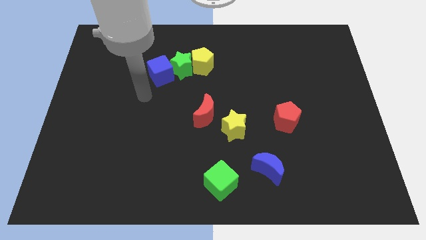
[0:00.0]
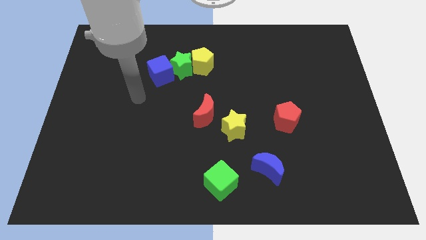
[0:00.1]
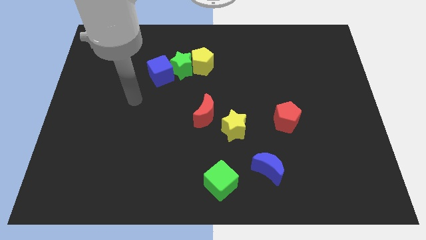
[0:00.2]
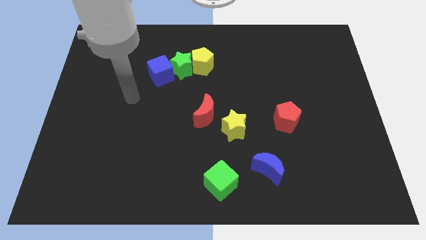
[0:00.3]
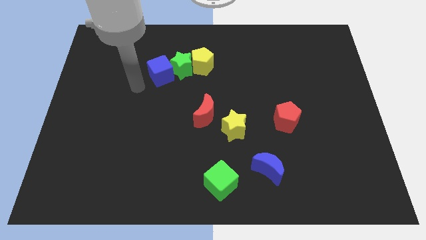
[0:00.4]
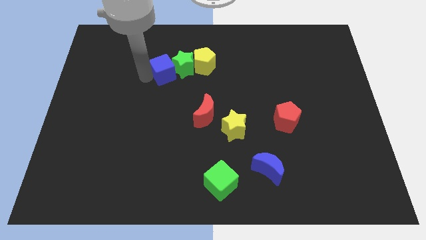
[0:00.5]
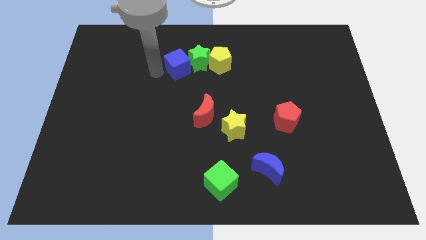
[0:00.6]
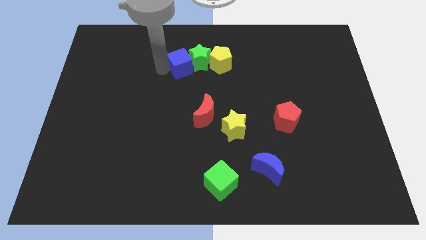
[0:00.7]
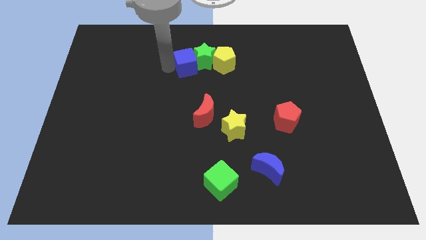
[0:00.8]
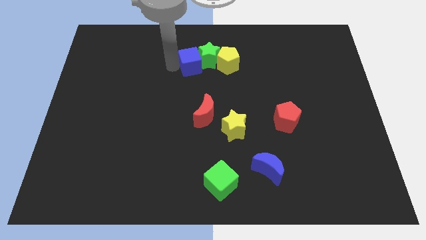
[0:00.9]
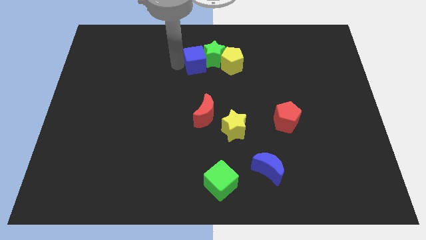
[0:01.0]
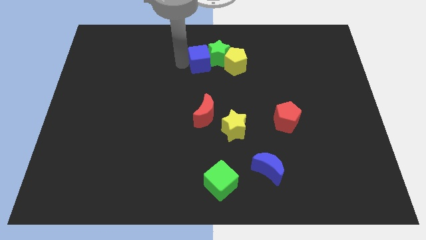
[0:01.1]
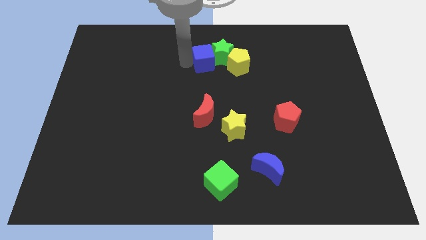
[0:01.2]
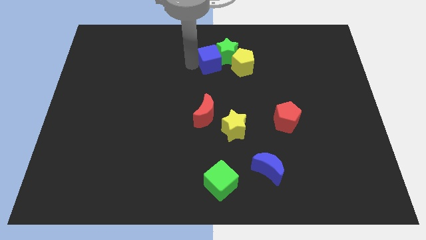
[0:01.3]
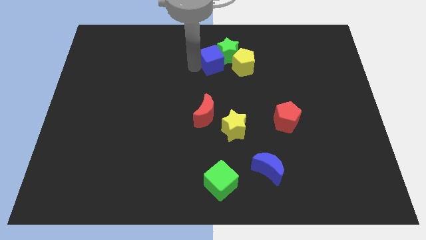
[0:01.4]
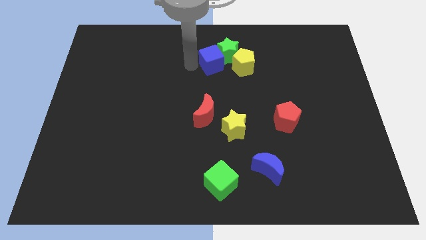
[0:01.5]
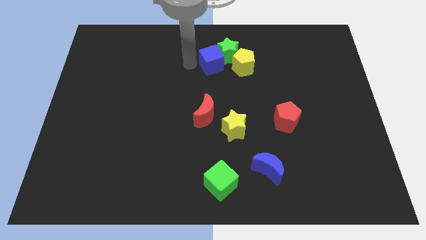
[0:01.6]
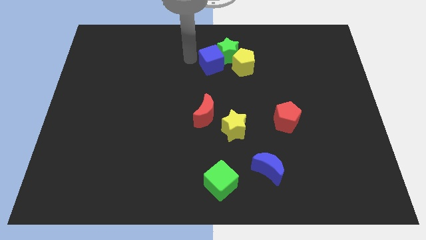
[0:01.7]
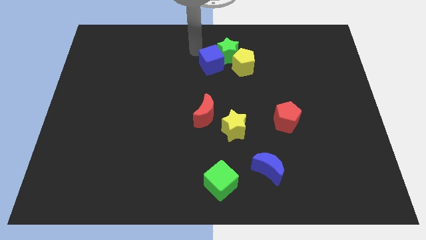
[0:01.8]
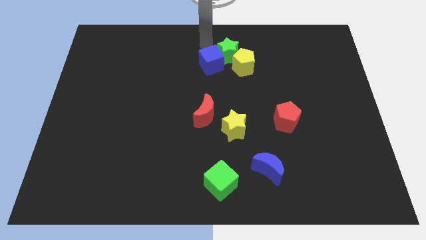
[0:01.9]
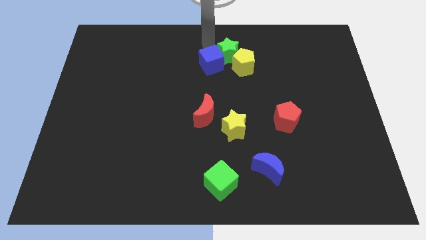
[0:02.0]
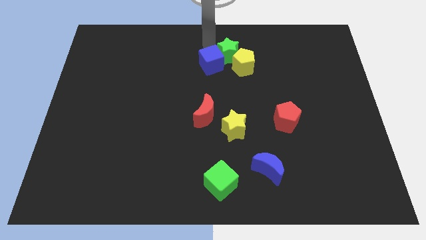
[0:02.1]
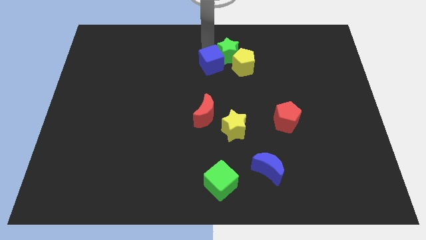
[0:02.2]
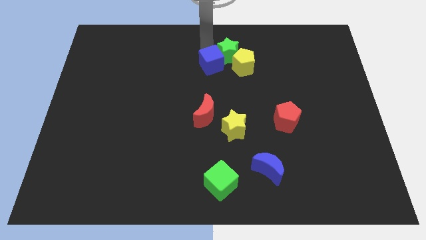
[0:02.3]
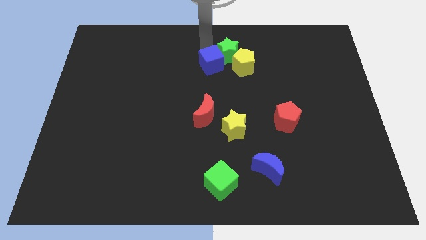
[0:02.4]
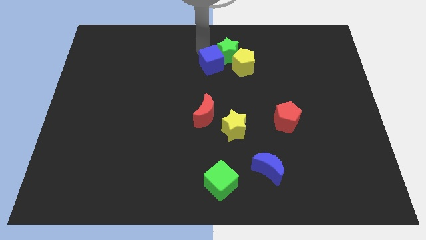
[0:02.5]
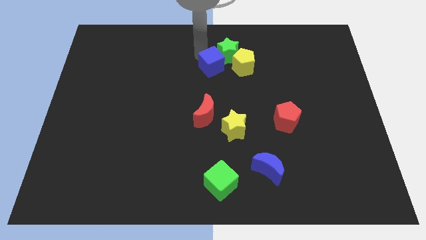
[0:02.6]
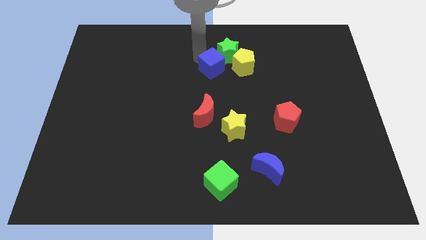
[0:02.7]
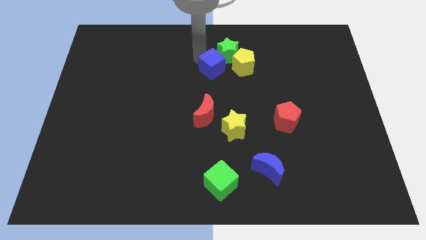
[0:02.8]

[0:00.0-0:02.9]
make a triangle out of green star blue cube and the yellow pentagon

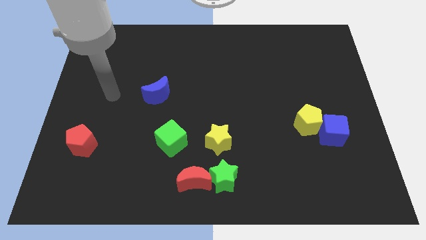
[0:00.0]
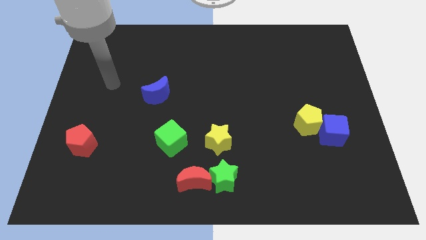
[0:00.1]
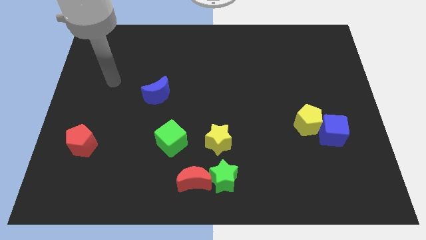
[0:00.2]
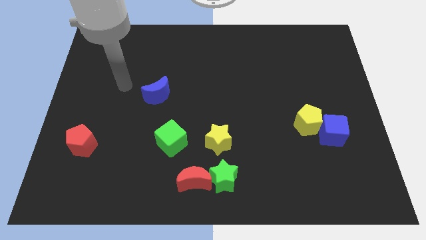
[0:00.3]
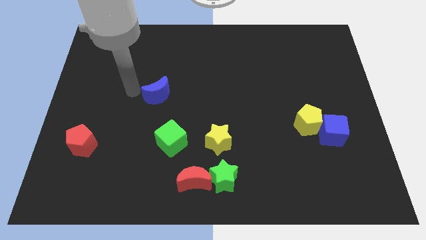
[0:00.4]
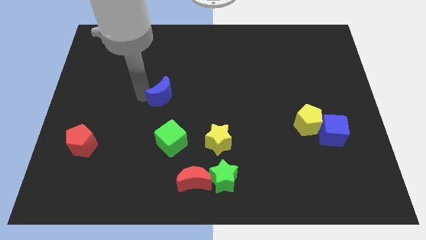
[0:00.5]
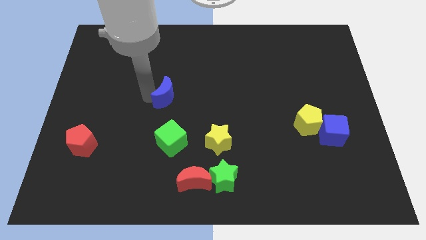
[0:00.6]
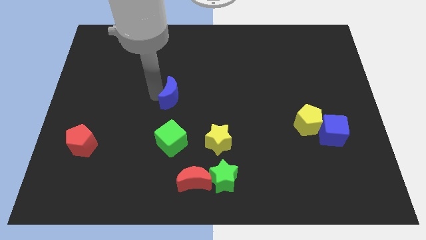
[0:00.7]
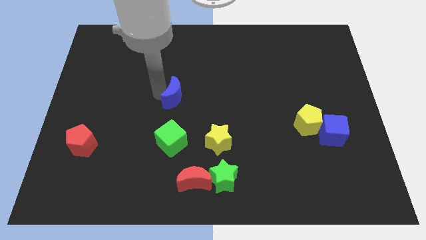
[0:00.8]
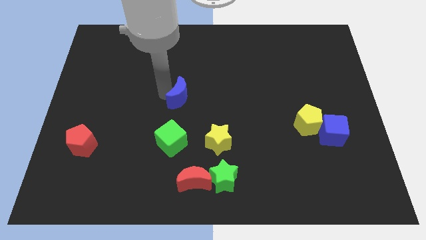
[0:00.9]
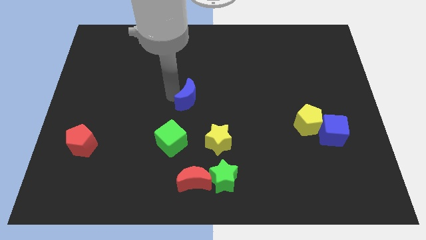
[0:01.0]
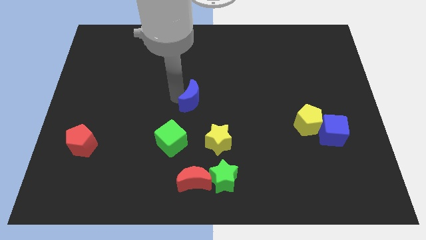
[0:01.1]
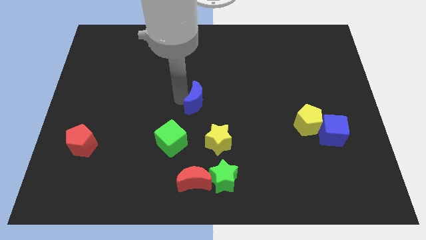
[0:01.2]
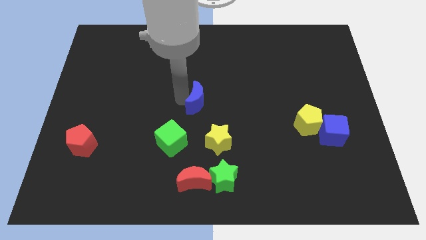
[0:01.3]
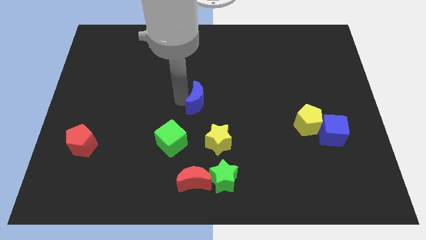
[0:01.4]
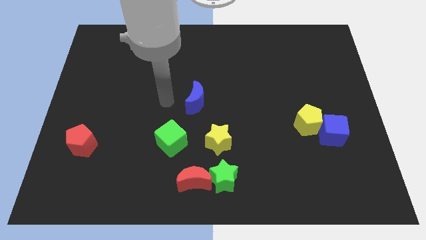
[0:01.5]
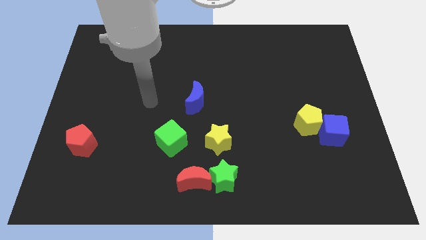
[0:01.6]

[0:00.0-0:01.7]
place blue moon diagonal to the green cube

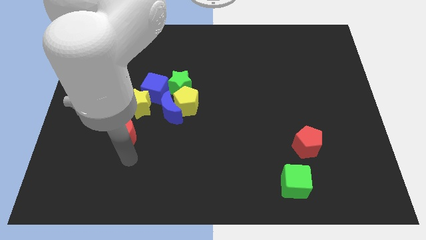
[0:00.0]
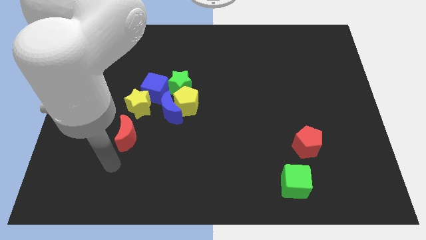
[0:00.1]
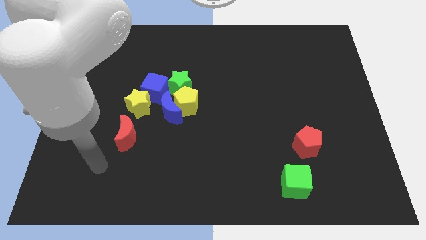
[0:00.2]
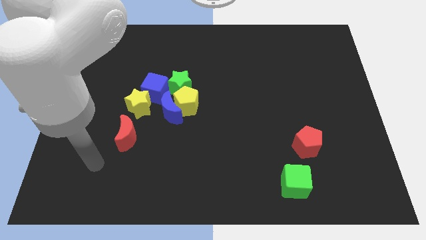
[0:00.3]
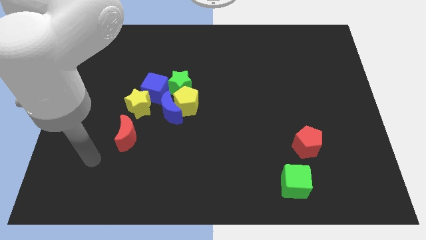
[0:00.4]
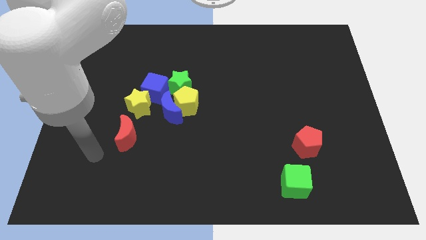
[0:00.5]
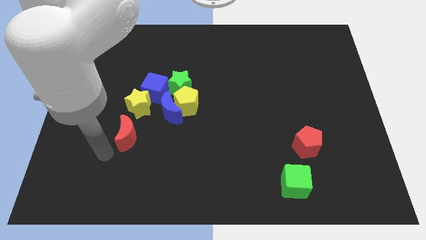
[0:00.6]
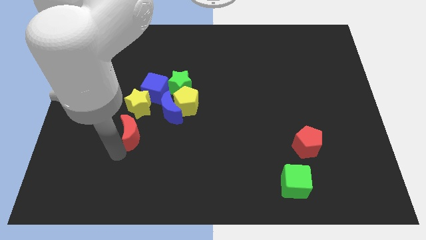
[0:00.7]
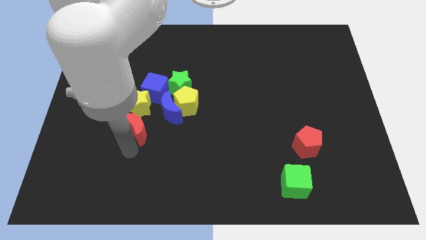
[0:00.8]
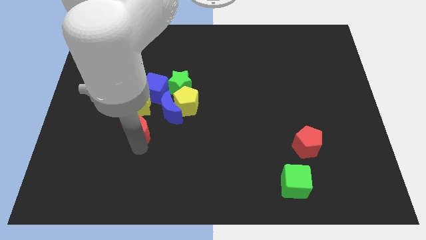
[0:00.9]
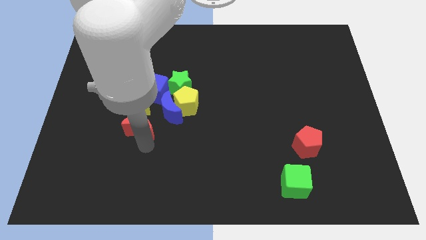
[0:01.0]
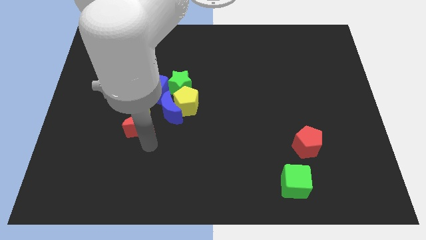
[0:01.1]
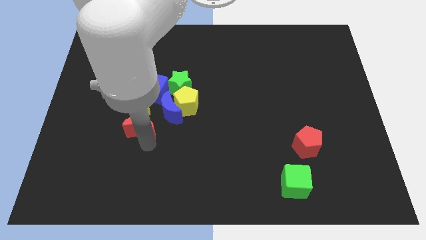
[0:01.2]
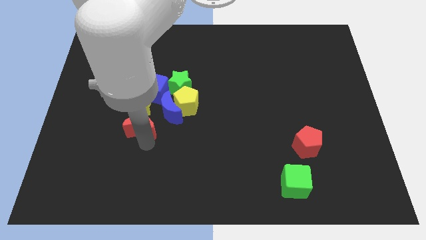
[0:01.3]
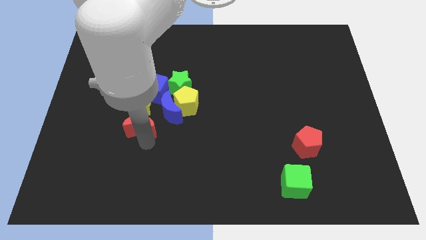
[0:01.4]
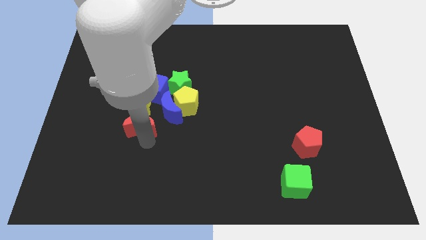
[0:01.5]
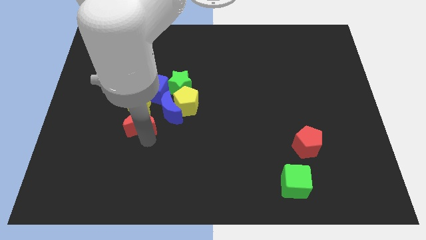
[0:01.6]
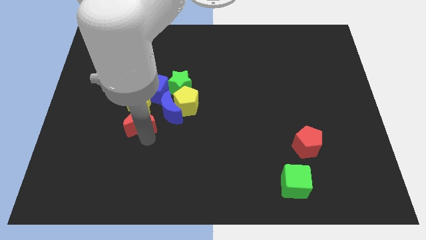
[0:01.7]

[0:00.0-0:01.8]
move the red moon below to the yellow star

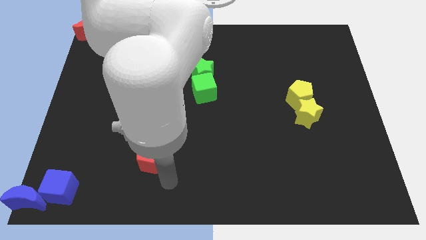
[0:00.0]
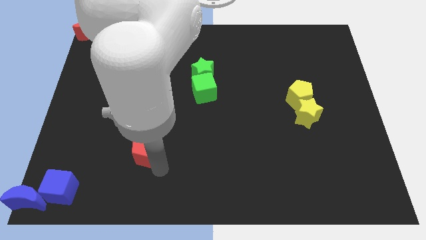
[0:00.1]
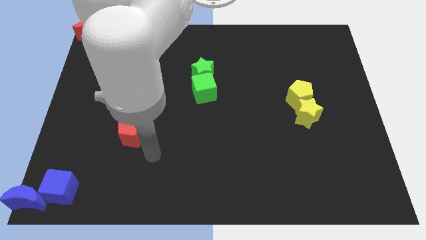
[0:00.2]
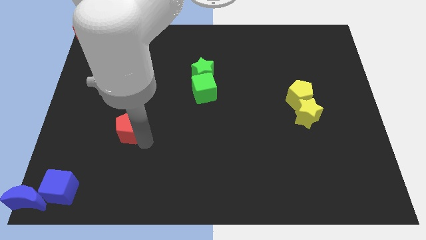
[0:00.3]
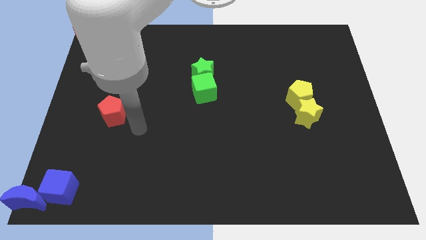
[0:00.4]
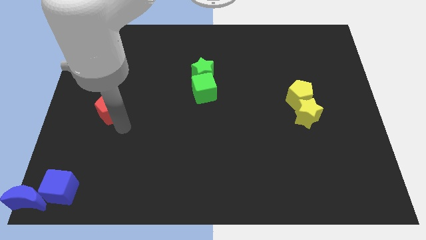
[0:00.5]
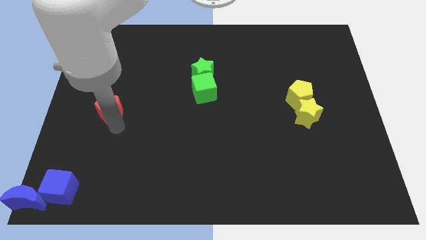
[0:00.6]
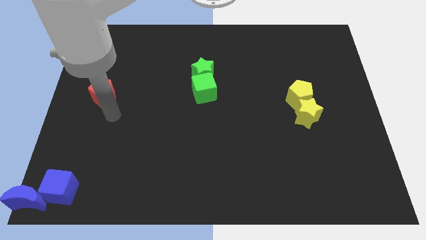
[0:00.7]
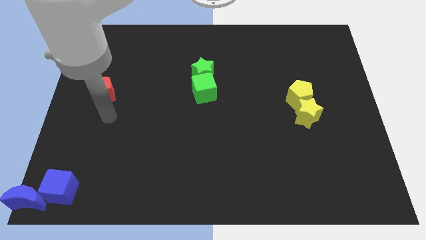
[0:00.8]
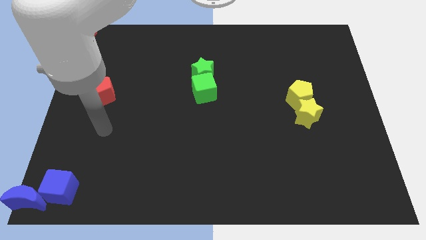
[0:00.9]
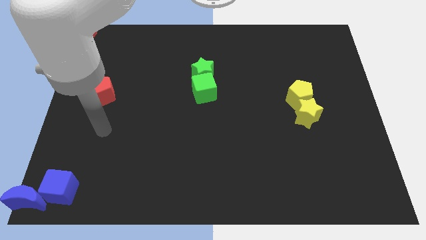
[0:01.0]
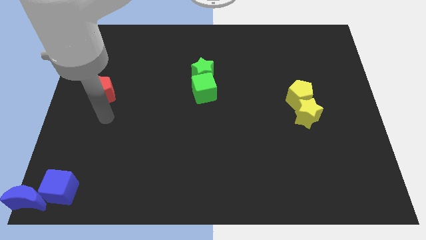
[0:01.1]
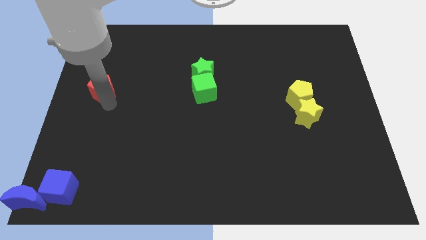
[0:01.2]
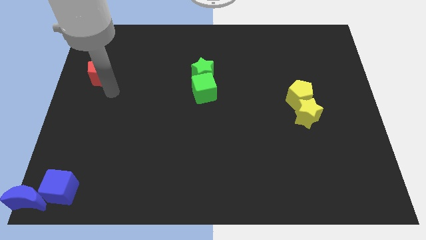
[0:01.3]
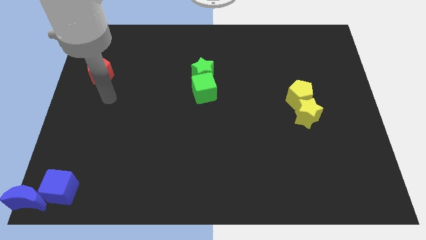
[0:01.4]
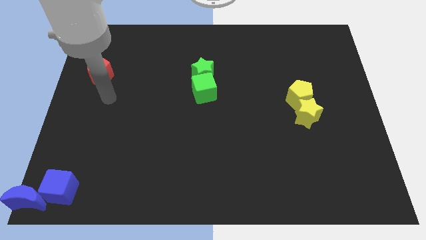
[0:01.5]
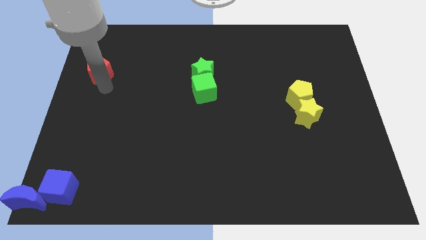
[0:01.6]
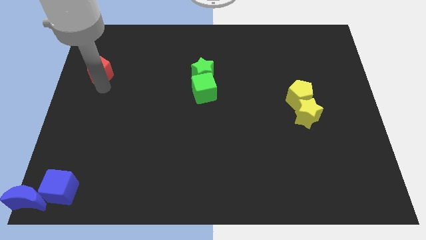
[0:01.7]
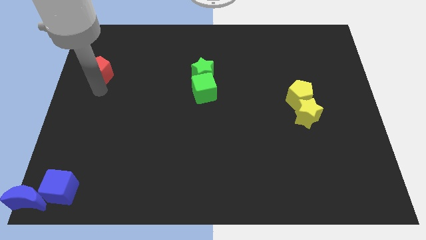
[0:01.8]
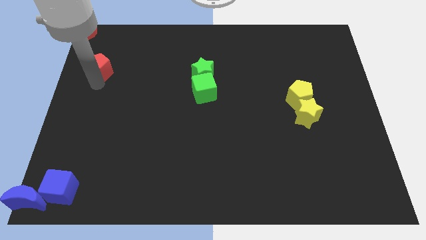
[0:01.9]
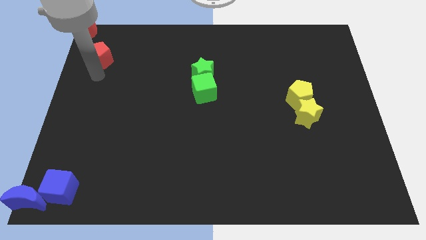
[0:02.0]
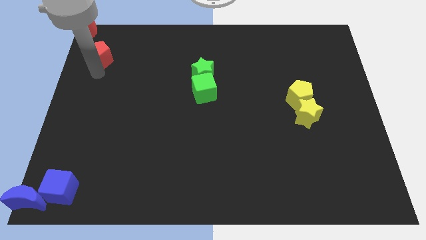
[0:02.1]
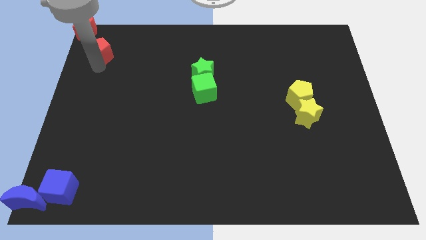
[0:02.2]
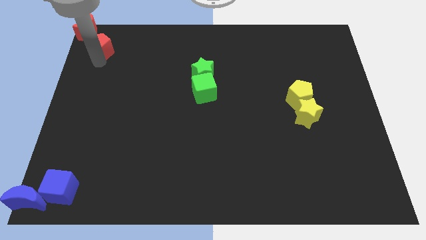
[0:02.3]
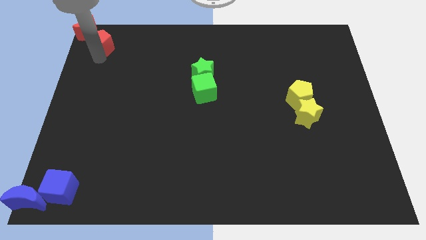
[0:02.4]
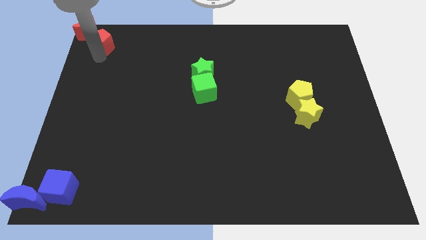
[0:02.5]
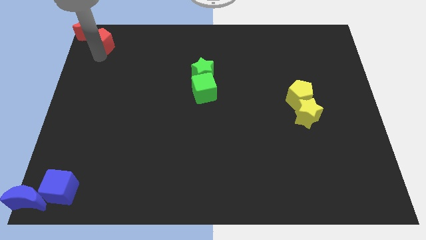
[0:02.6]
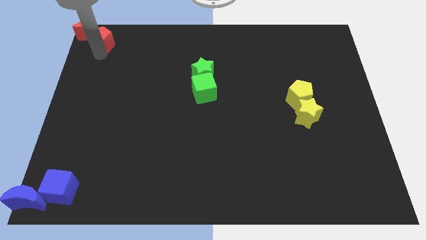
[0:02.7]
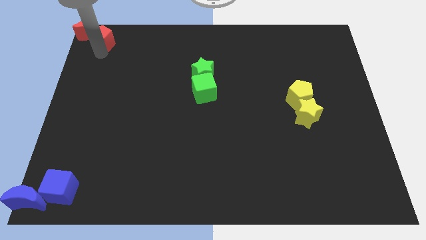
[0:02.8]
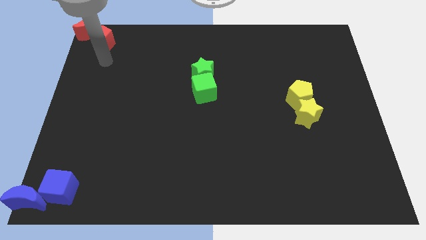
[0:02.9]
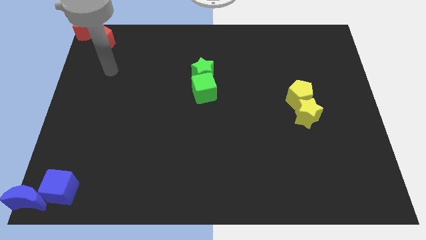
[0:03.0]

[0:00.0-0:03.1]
move the red pentagon to the bottom right of the red crescent
